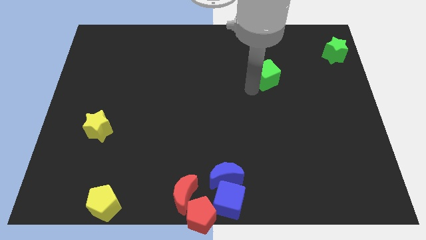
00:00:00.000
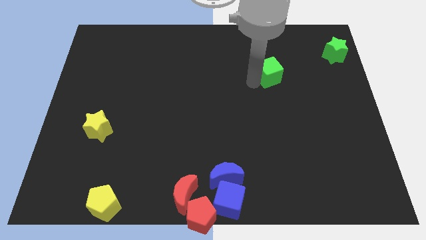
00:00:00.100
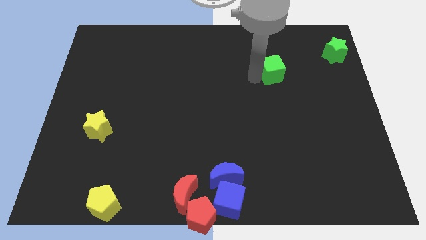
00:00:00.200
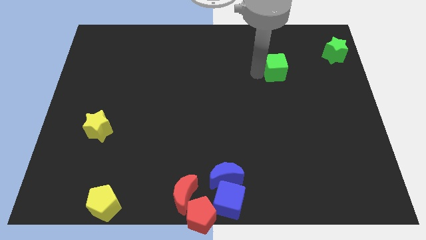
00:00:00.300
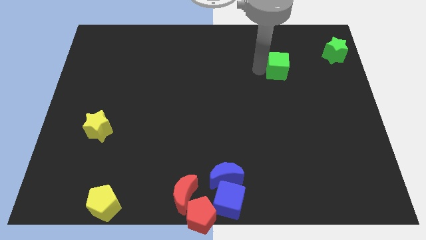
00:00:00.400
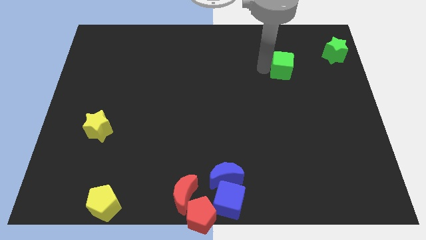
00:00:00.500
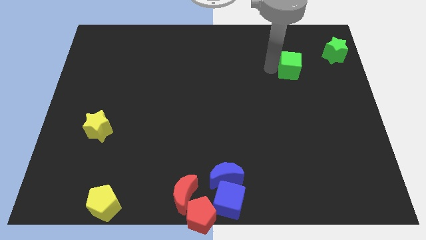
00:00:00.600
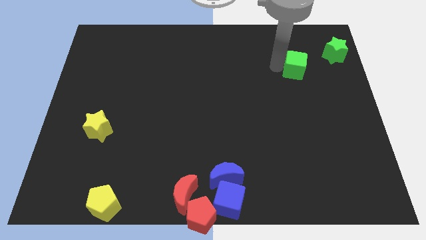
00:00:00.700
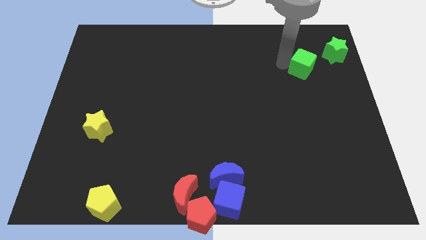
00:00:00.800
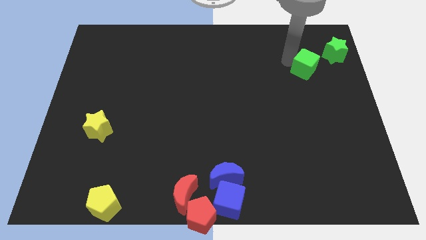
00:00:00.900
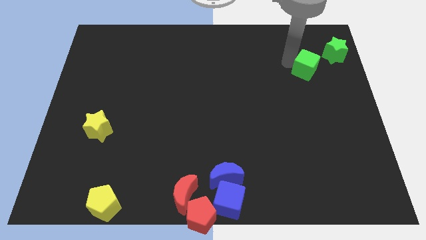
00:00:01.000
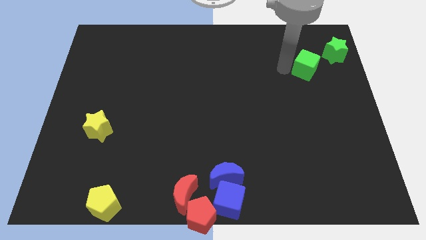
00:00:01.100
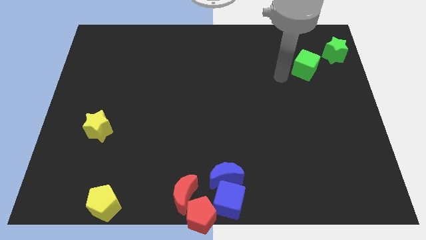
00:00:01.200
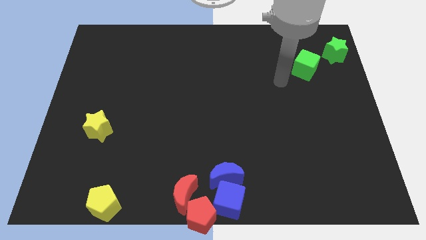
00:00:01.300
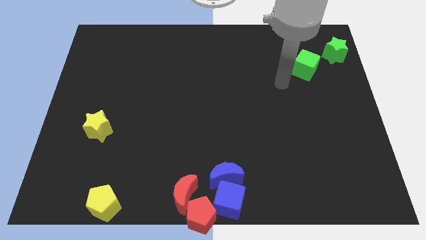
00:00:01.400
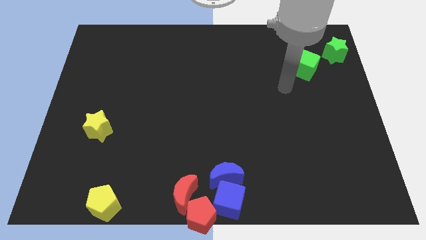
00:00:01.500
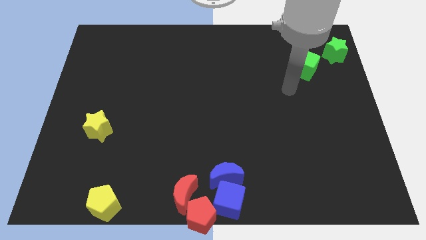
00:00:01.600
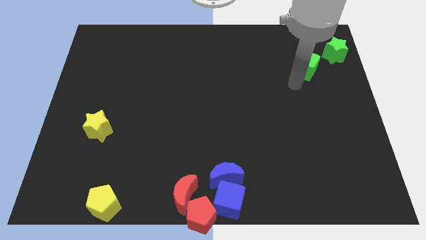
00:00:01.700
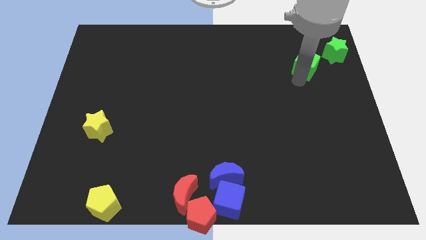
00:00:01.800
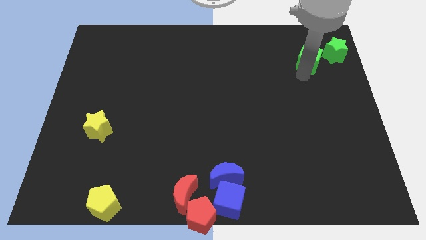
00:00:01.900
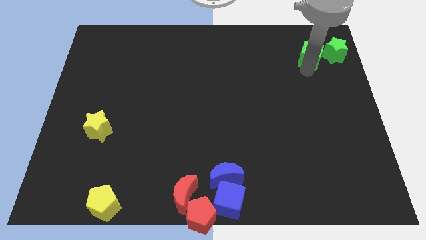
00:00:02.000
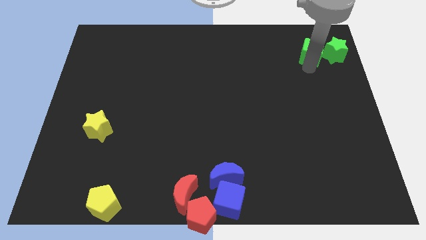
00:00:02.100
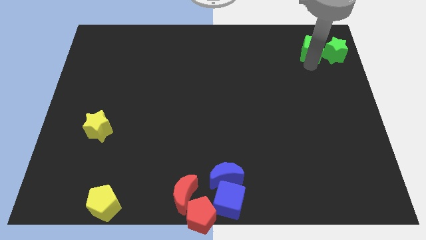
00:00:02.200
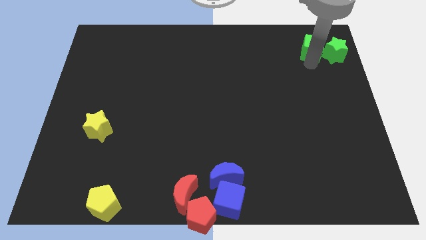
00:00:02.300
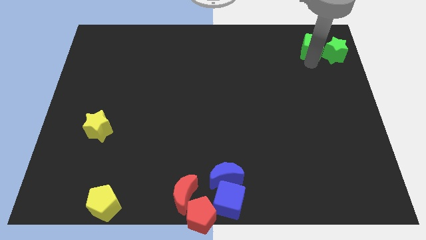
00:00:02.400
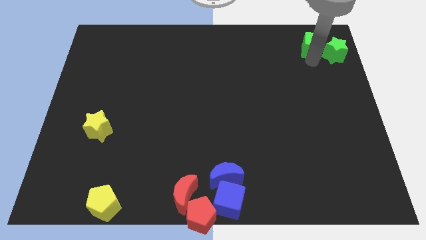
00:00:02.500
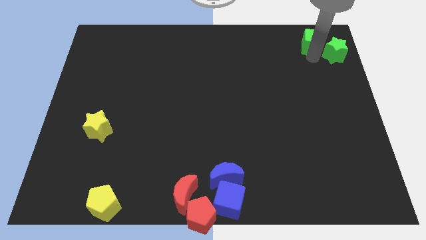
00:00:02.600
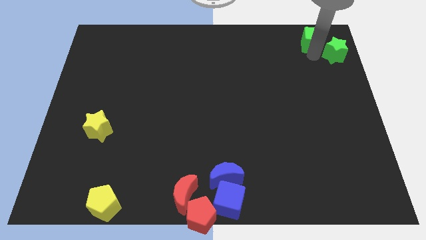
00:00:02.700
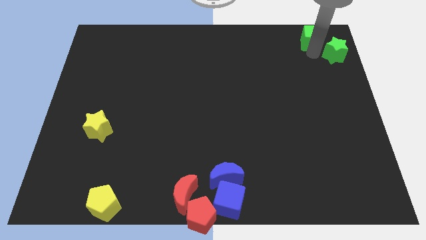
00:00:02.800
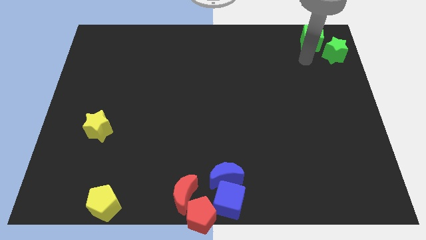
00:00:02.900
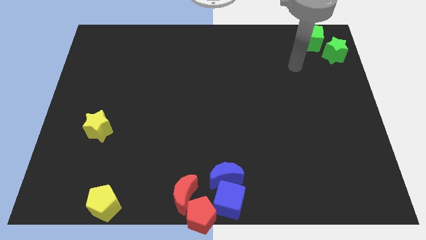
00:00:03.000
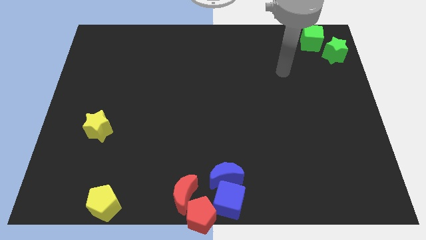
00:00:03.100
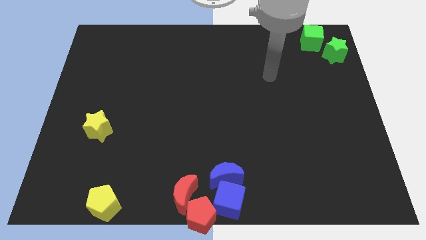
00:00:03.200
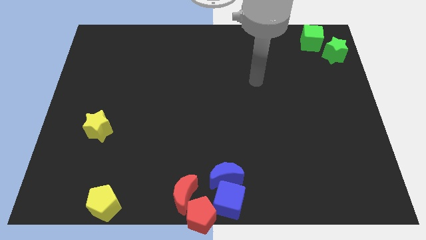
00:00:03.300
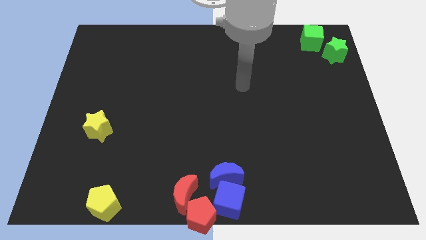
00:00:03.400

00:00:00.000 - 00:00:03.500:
place the green cube diagonally to the green star

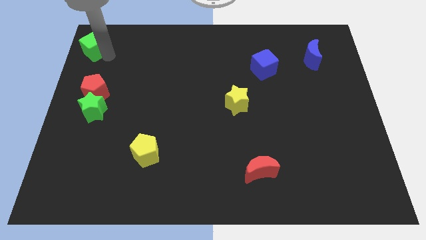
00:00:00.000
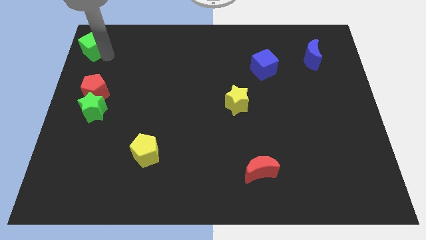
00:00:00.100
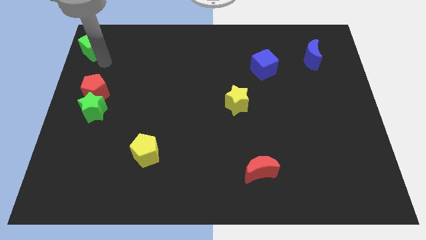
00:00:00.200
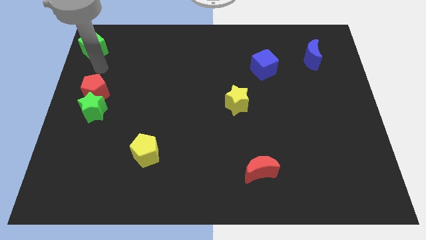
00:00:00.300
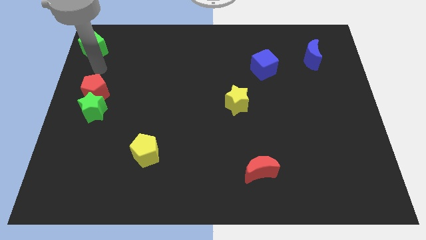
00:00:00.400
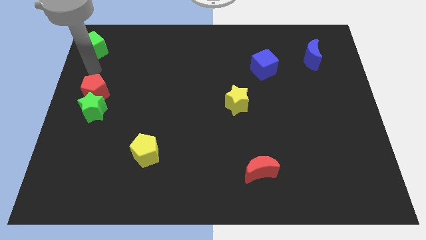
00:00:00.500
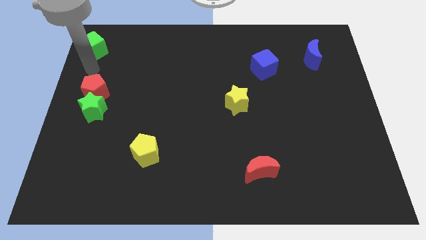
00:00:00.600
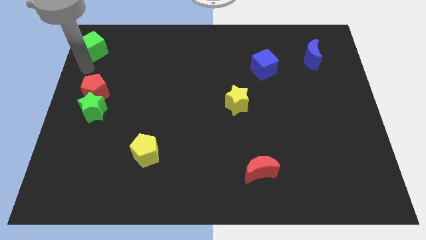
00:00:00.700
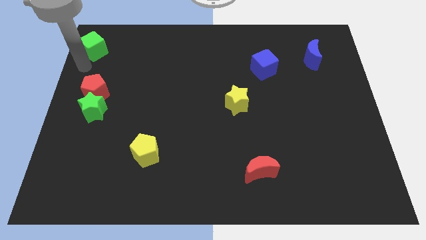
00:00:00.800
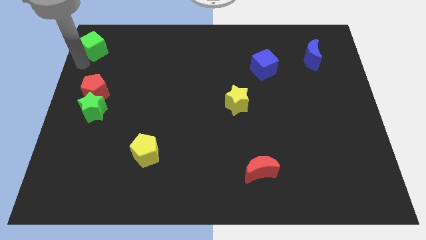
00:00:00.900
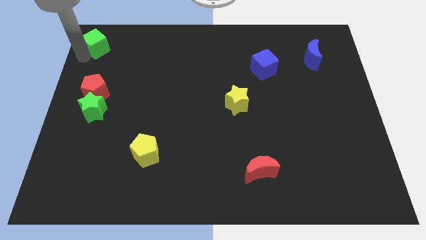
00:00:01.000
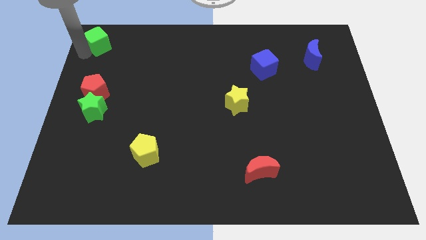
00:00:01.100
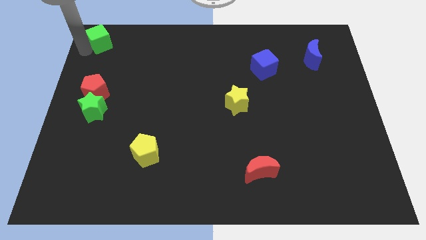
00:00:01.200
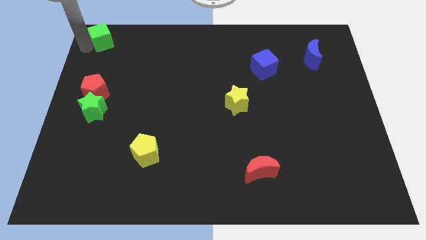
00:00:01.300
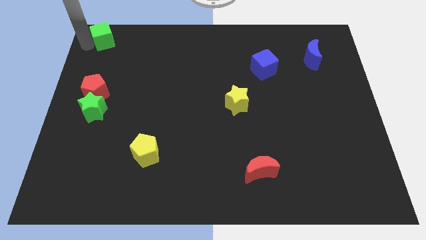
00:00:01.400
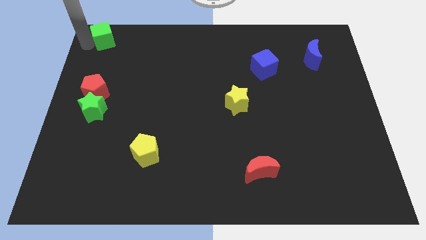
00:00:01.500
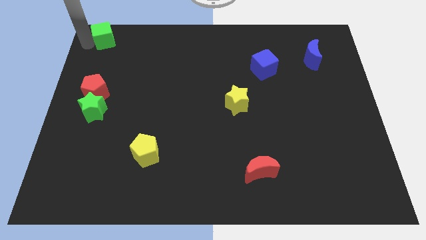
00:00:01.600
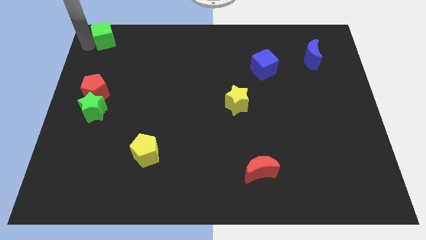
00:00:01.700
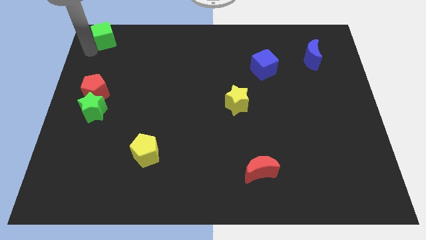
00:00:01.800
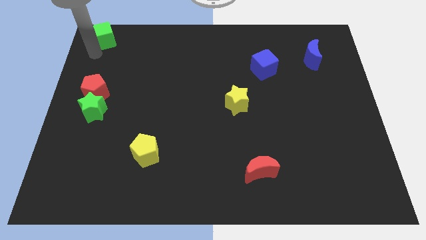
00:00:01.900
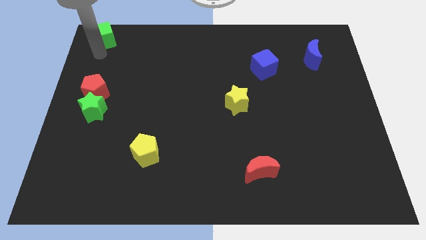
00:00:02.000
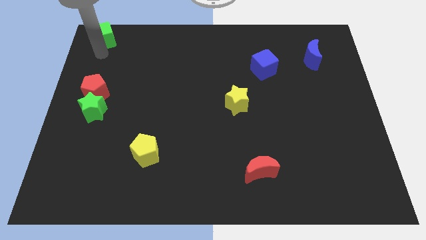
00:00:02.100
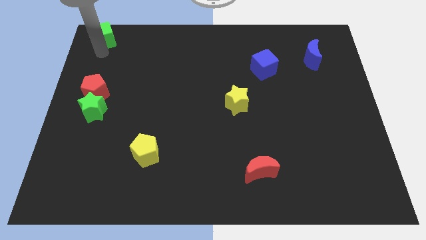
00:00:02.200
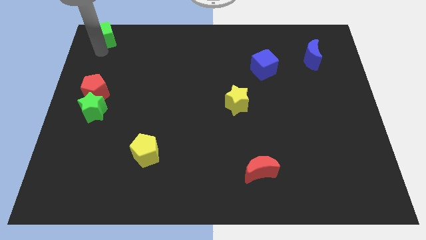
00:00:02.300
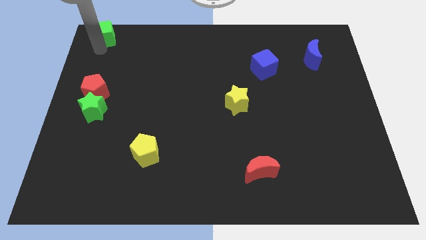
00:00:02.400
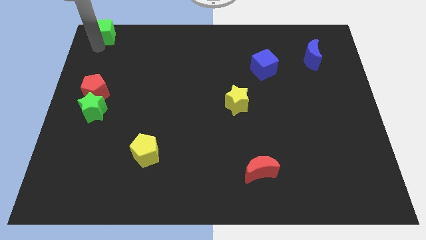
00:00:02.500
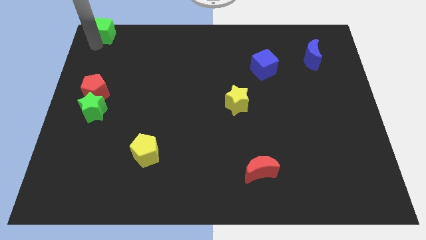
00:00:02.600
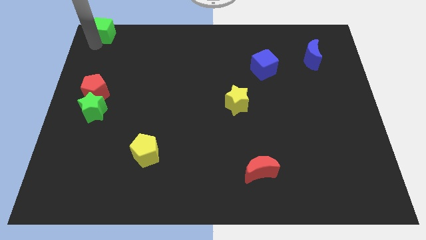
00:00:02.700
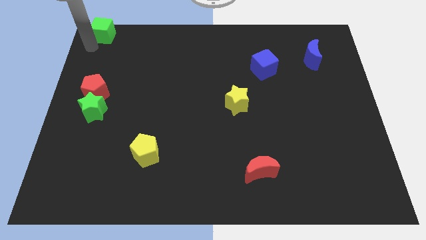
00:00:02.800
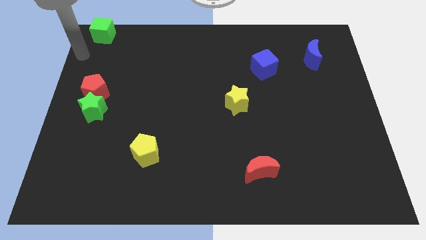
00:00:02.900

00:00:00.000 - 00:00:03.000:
place green cube vertically above red pentagon

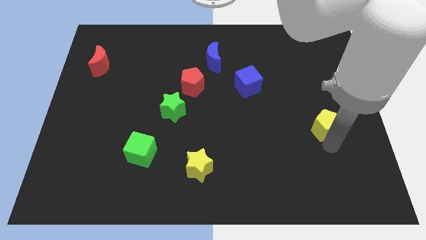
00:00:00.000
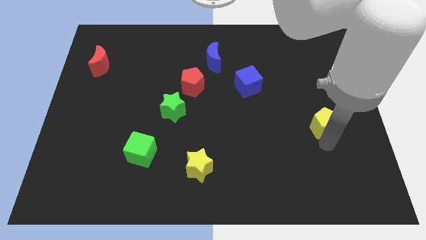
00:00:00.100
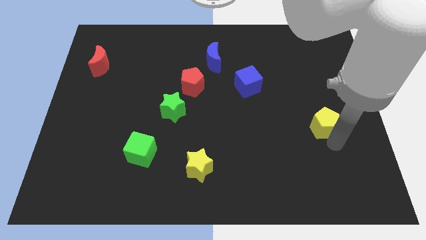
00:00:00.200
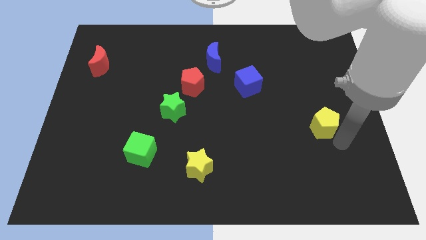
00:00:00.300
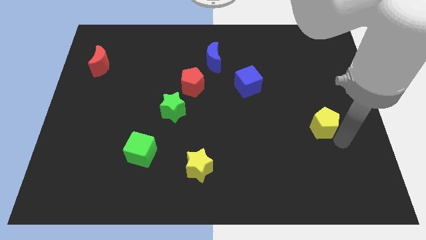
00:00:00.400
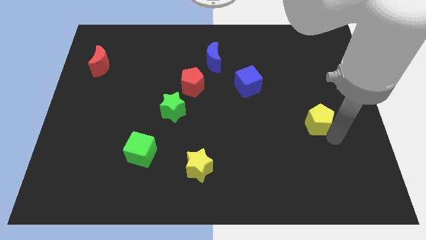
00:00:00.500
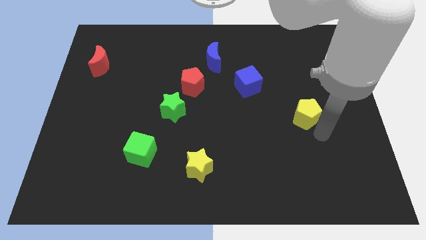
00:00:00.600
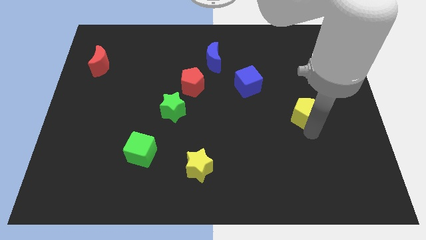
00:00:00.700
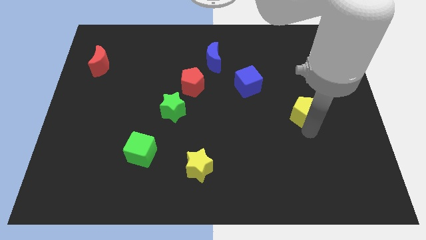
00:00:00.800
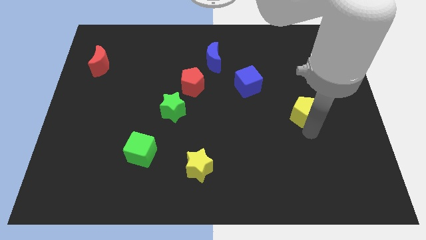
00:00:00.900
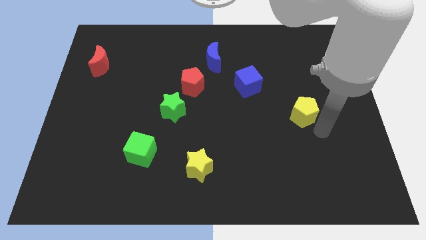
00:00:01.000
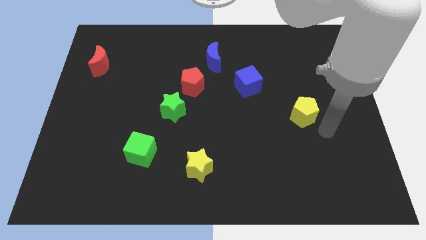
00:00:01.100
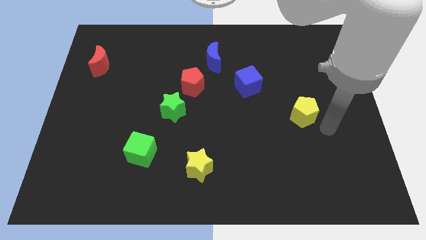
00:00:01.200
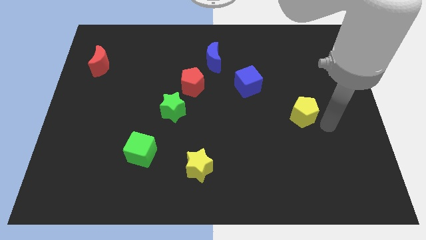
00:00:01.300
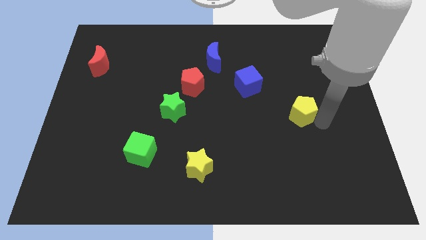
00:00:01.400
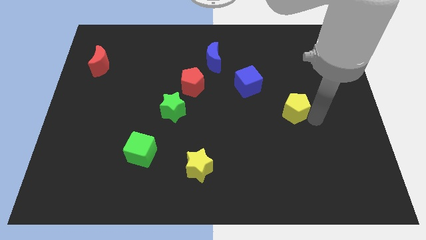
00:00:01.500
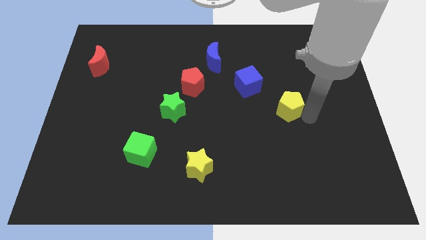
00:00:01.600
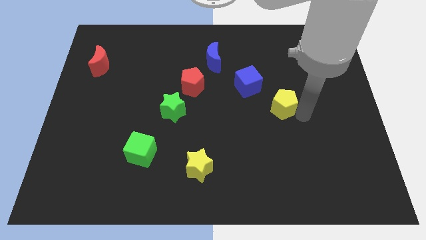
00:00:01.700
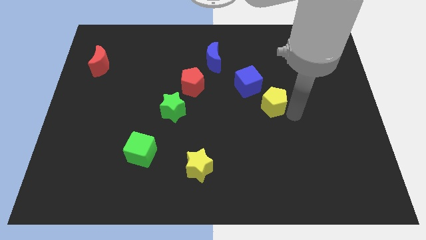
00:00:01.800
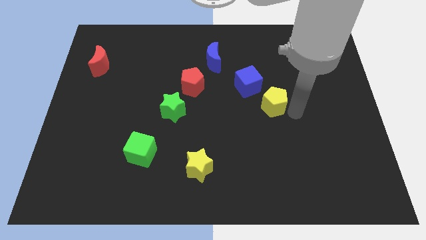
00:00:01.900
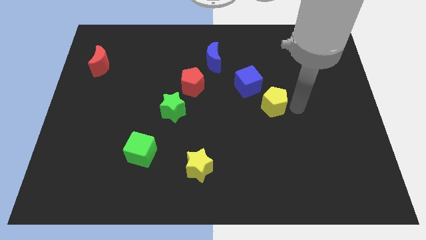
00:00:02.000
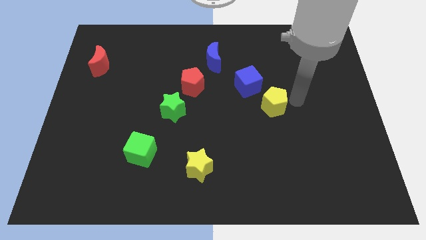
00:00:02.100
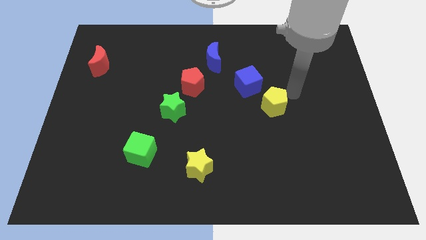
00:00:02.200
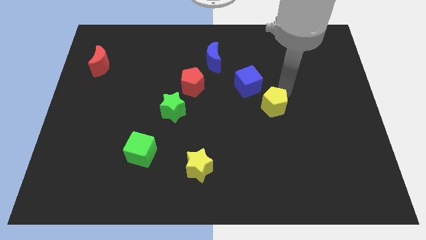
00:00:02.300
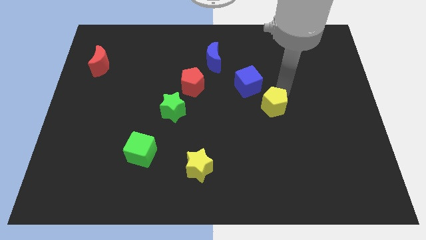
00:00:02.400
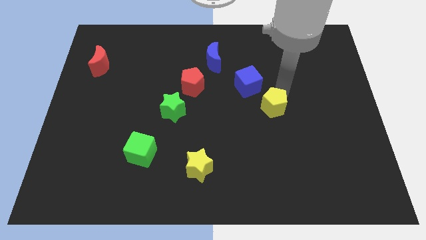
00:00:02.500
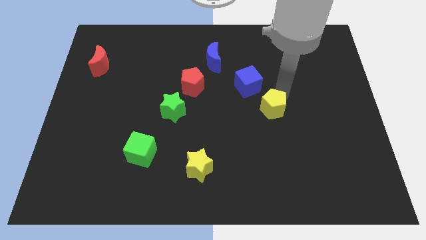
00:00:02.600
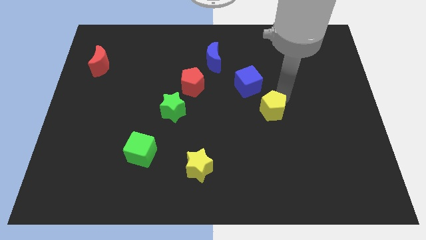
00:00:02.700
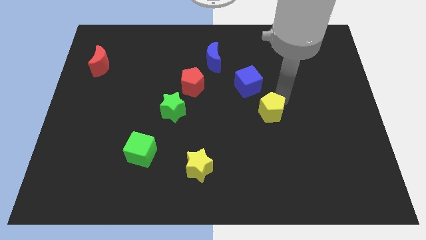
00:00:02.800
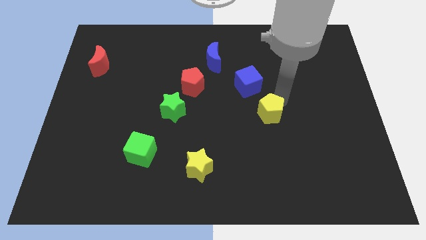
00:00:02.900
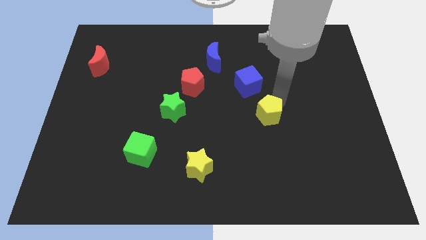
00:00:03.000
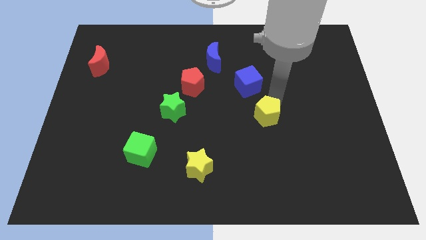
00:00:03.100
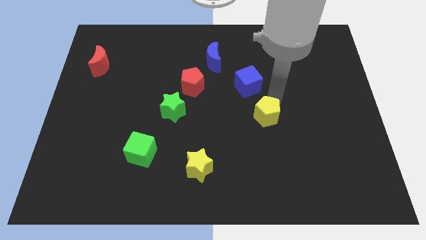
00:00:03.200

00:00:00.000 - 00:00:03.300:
place the yellow pentagon below the blue cube
